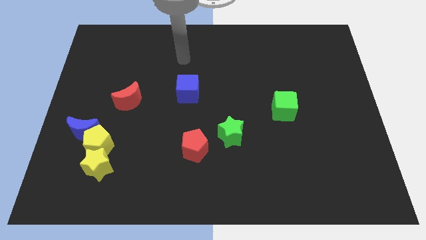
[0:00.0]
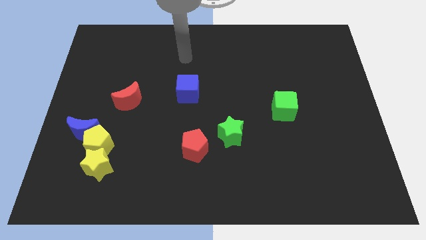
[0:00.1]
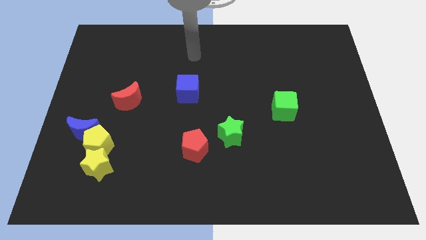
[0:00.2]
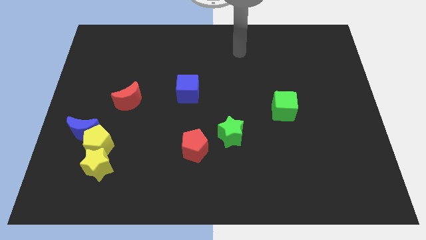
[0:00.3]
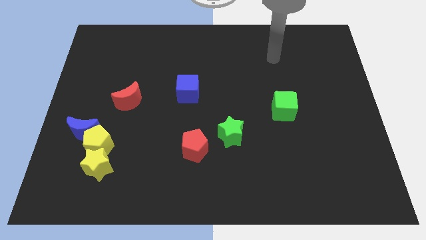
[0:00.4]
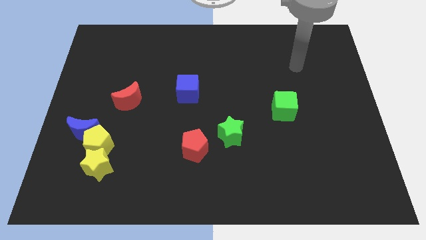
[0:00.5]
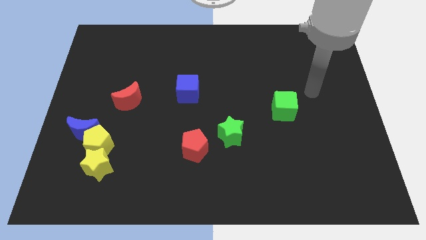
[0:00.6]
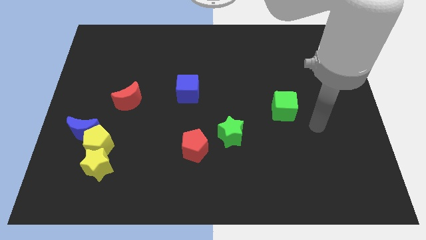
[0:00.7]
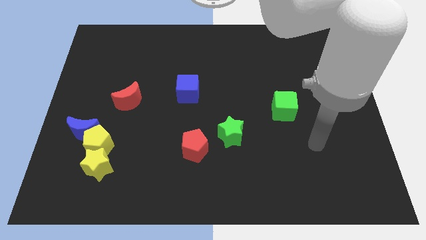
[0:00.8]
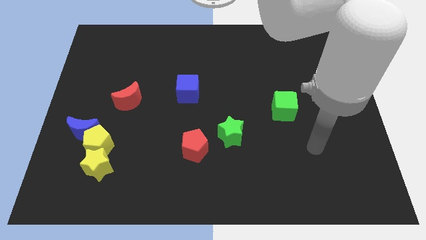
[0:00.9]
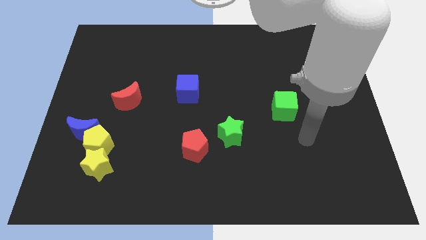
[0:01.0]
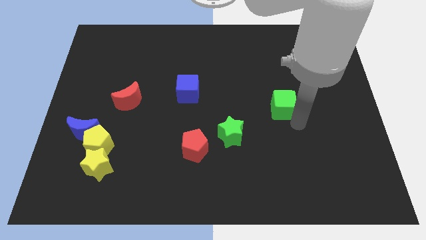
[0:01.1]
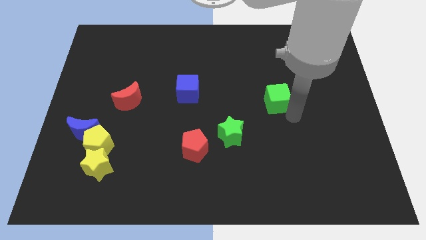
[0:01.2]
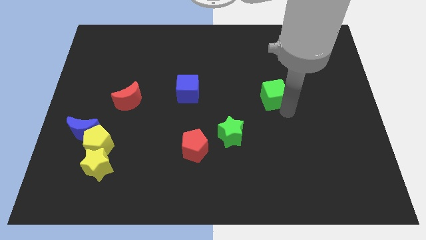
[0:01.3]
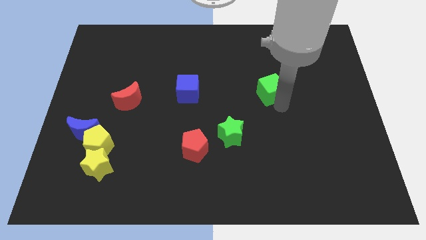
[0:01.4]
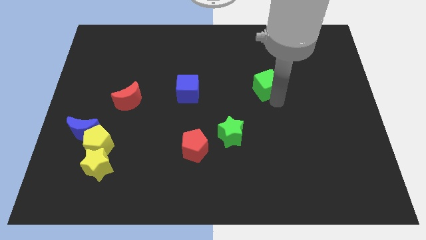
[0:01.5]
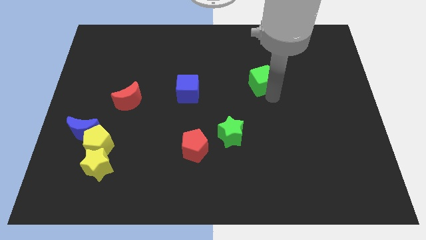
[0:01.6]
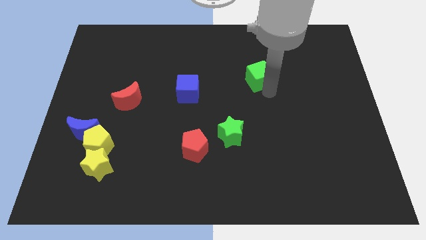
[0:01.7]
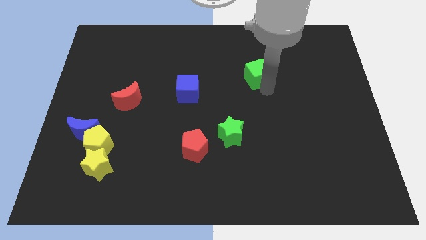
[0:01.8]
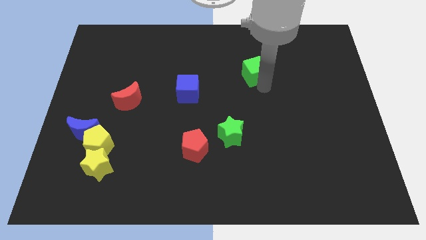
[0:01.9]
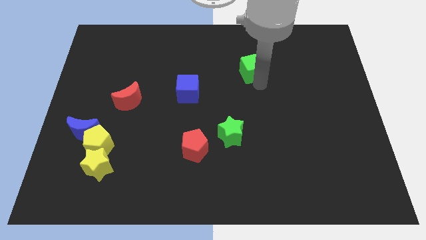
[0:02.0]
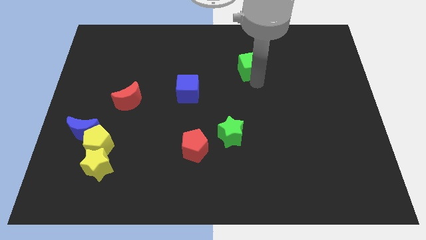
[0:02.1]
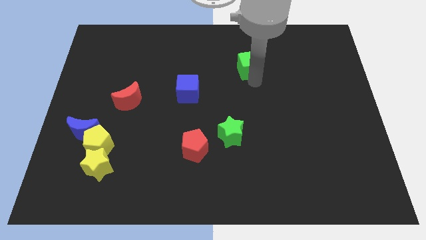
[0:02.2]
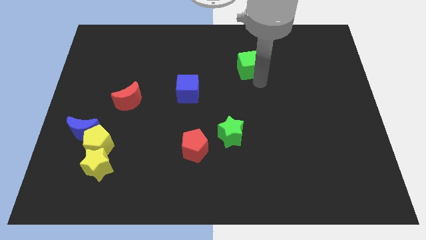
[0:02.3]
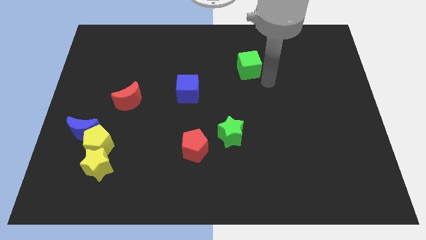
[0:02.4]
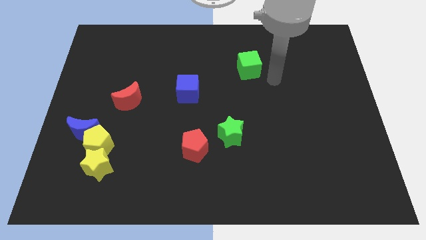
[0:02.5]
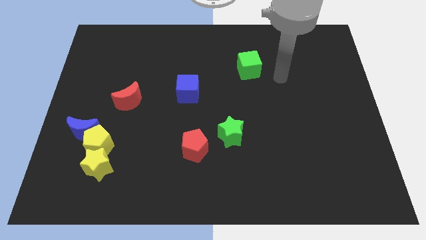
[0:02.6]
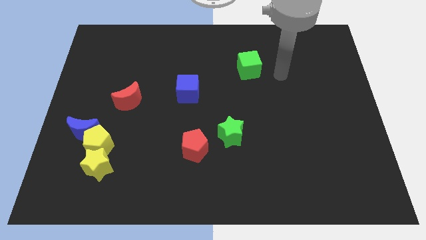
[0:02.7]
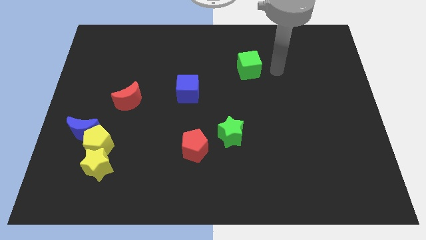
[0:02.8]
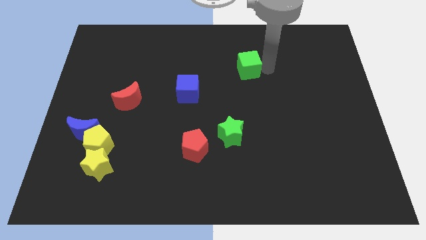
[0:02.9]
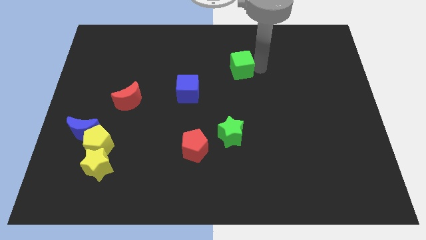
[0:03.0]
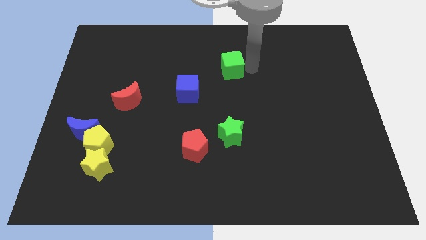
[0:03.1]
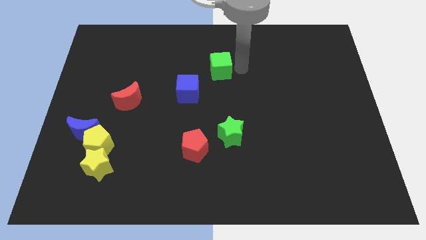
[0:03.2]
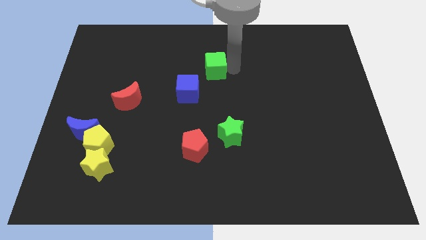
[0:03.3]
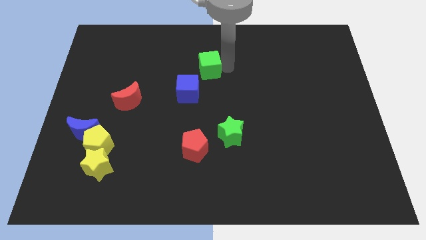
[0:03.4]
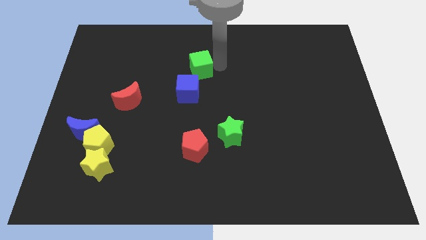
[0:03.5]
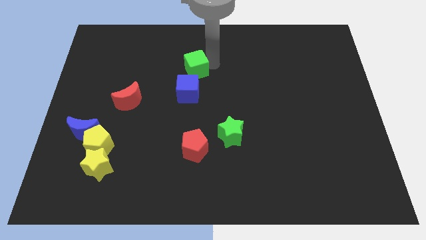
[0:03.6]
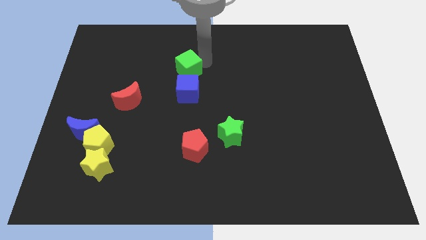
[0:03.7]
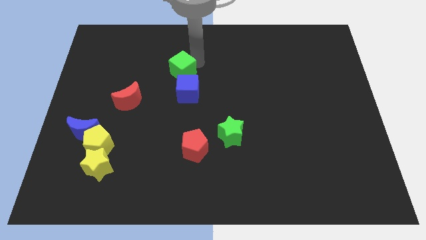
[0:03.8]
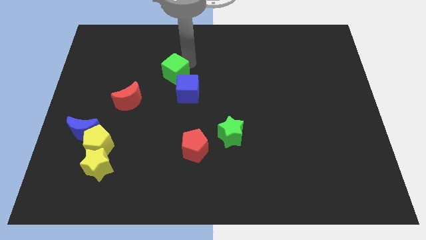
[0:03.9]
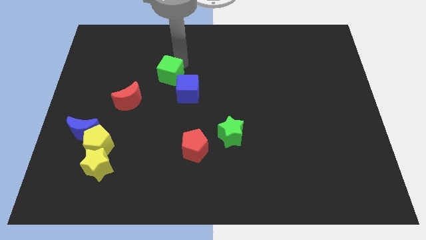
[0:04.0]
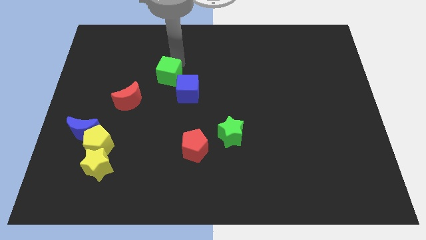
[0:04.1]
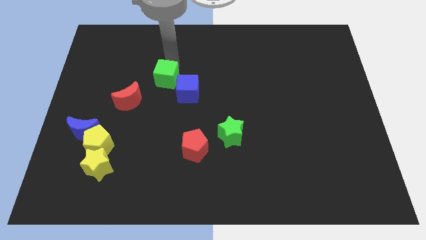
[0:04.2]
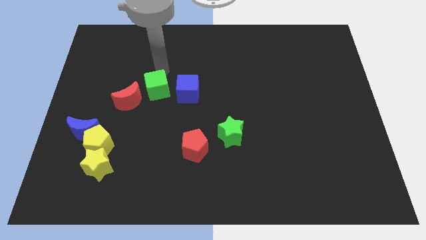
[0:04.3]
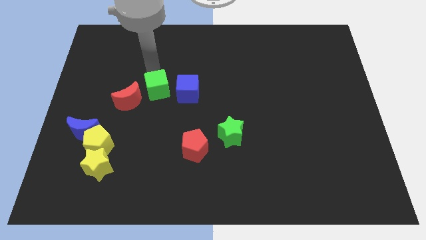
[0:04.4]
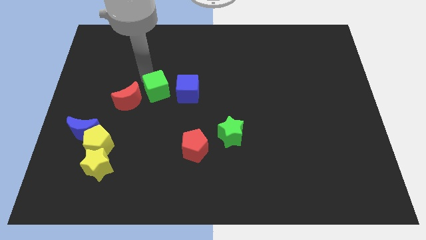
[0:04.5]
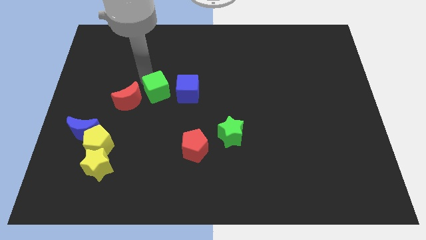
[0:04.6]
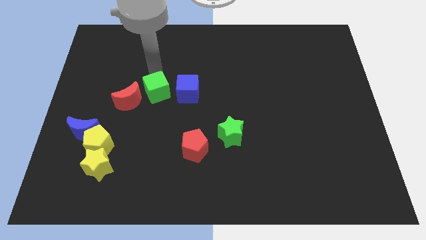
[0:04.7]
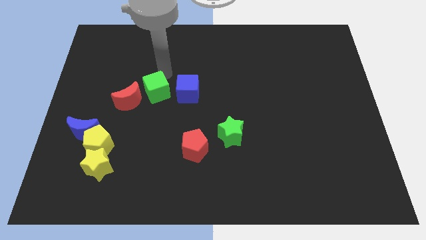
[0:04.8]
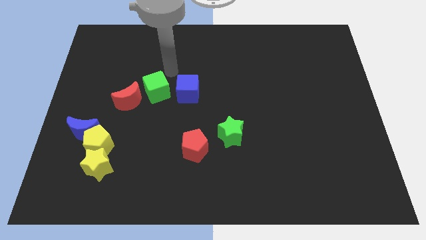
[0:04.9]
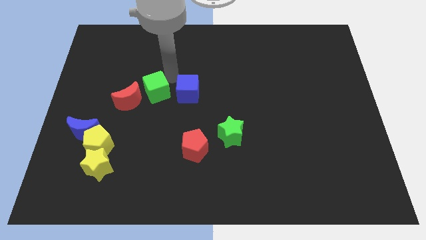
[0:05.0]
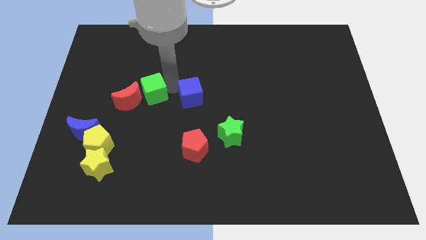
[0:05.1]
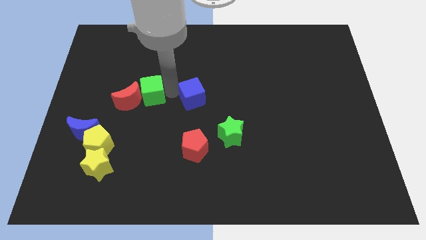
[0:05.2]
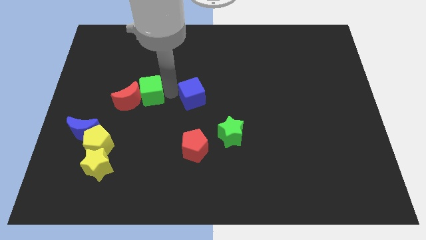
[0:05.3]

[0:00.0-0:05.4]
push the green cube next to the red moon

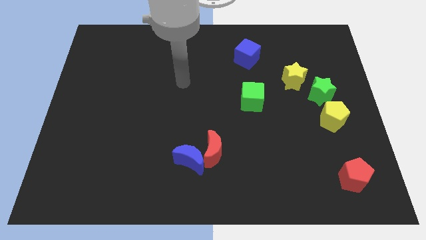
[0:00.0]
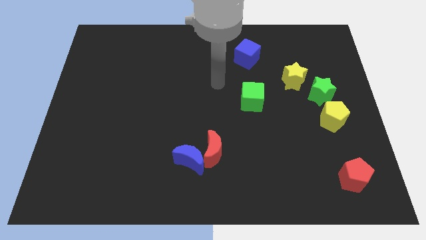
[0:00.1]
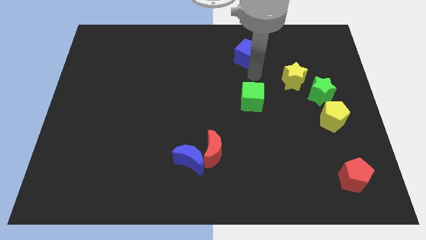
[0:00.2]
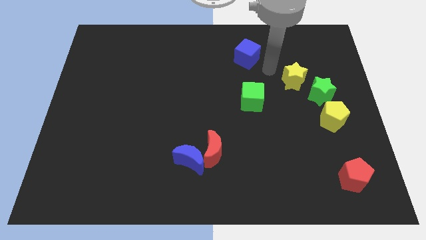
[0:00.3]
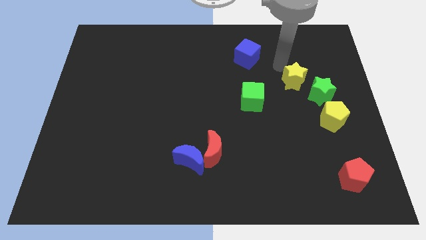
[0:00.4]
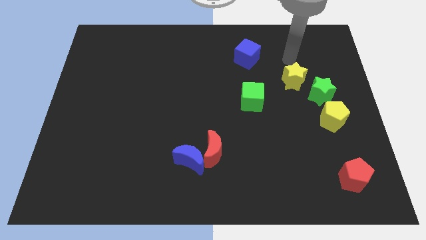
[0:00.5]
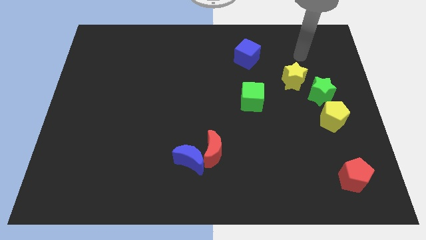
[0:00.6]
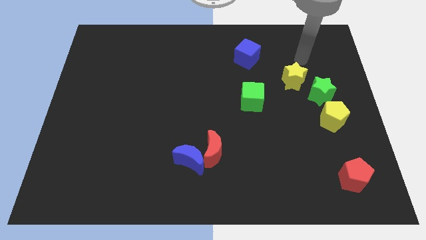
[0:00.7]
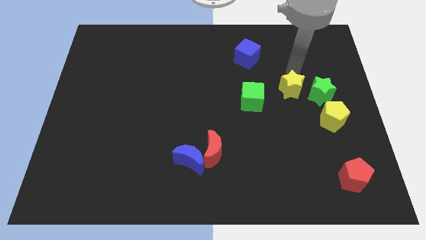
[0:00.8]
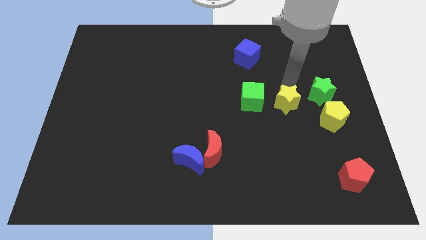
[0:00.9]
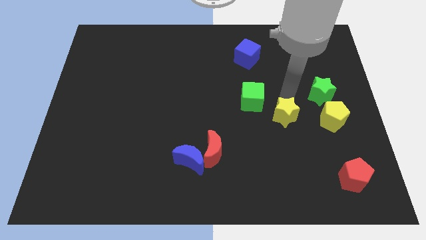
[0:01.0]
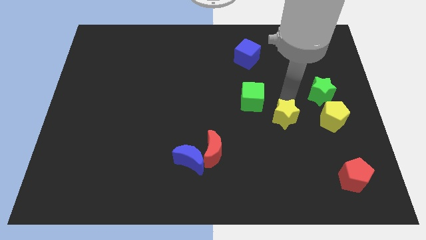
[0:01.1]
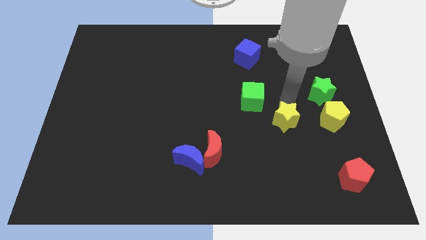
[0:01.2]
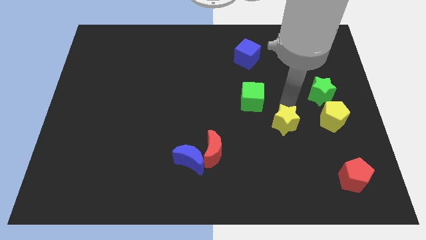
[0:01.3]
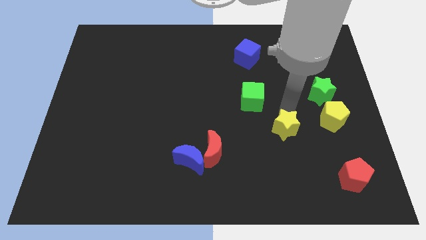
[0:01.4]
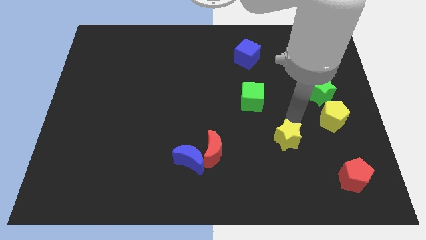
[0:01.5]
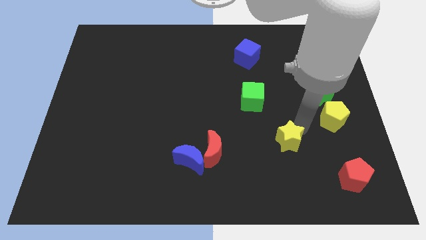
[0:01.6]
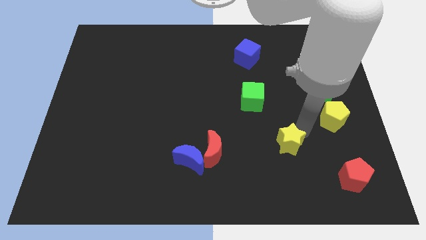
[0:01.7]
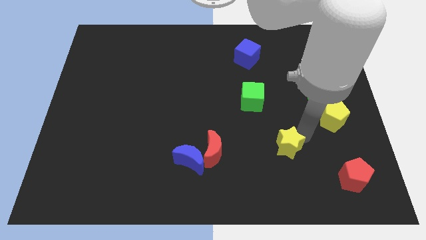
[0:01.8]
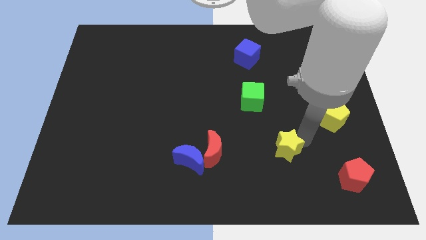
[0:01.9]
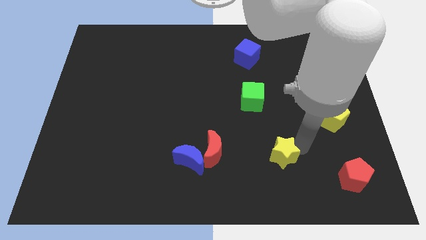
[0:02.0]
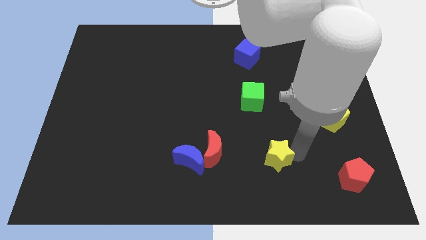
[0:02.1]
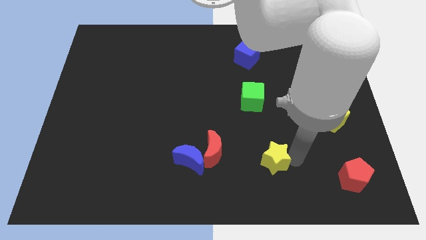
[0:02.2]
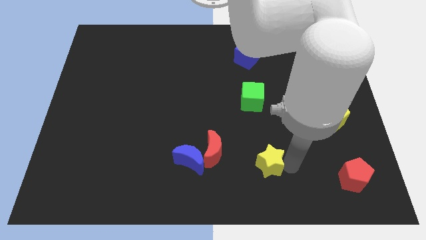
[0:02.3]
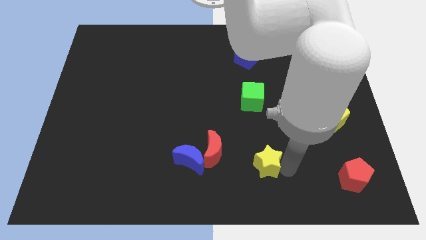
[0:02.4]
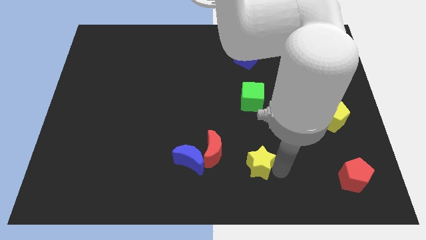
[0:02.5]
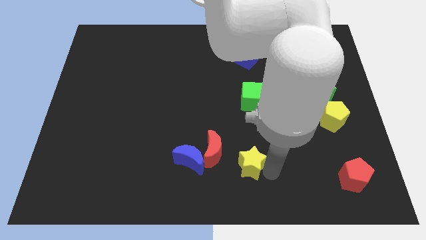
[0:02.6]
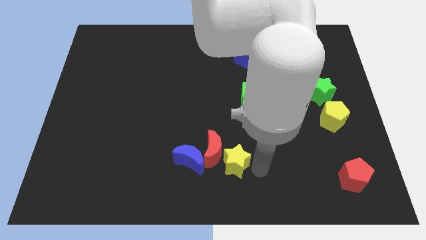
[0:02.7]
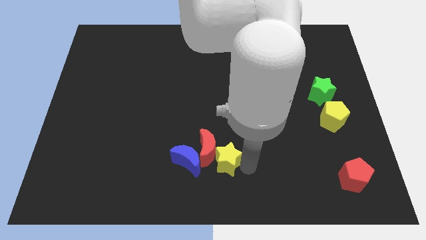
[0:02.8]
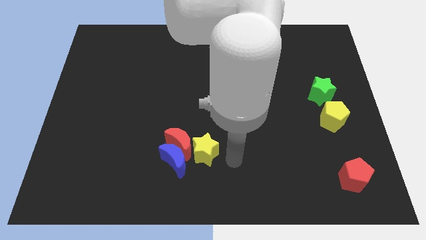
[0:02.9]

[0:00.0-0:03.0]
move the yellow star to the red moon
